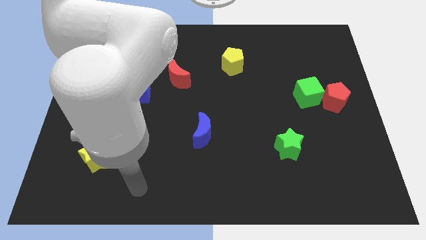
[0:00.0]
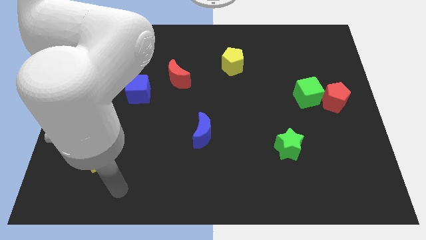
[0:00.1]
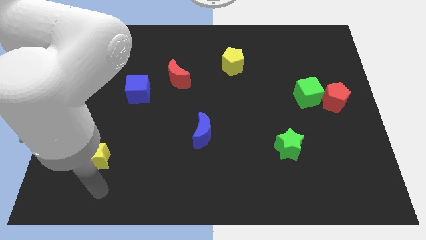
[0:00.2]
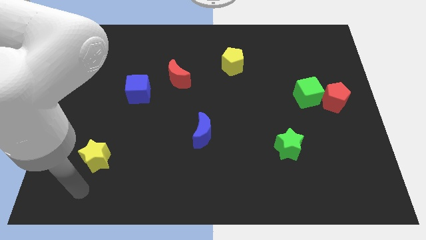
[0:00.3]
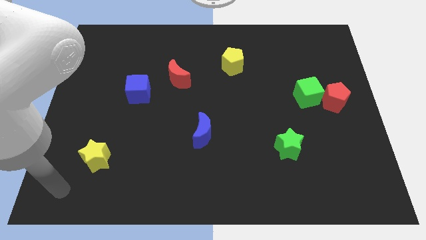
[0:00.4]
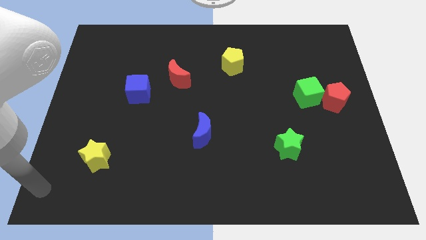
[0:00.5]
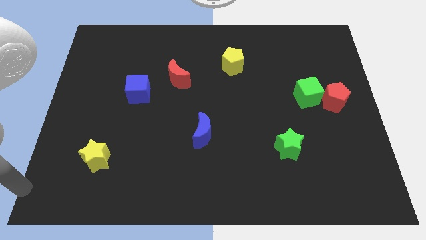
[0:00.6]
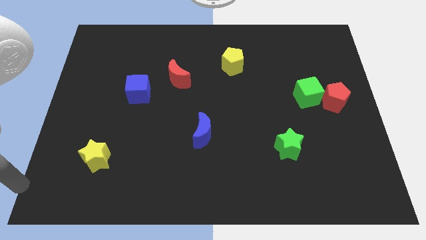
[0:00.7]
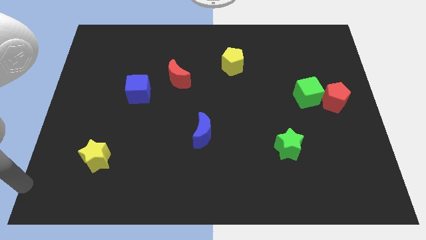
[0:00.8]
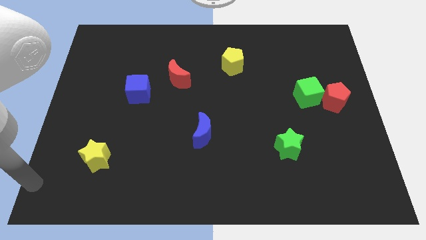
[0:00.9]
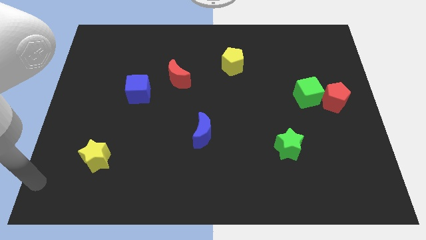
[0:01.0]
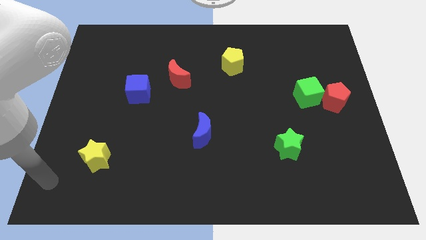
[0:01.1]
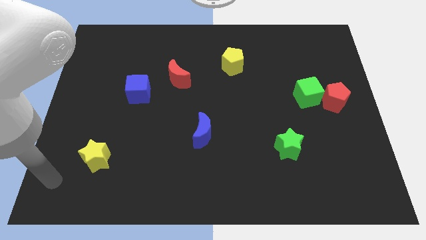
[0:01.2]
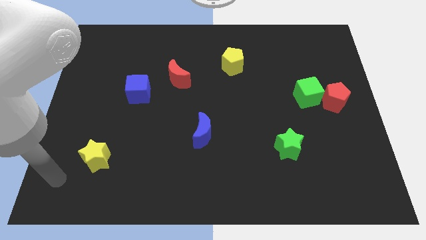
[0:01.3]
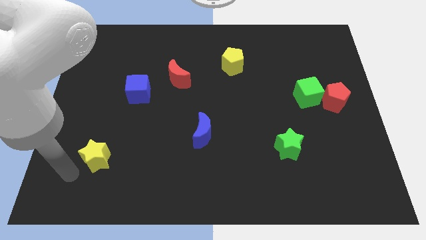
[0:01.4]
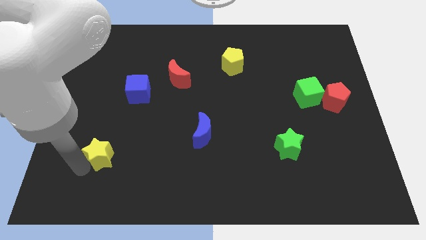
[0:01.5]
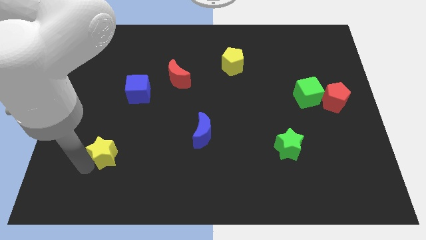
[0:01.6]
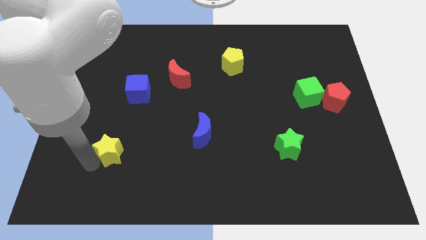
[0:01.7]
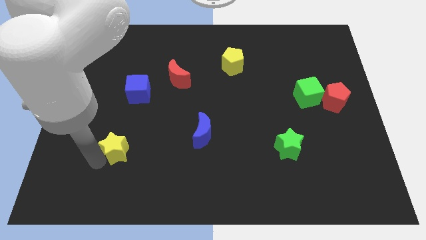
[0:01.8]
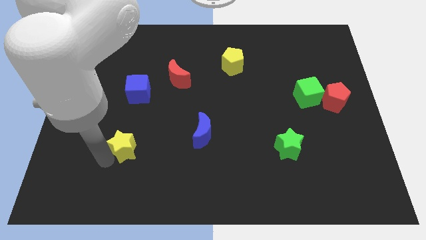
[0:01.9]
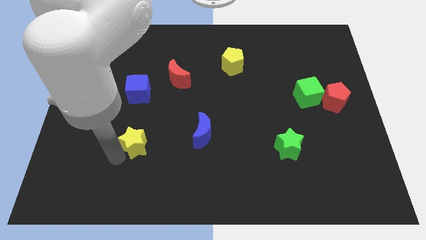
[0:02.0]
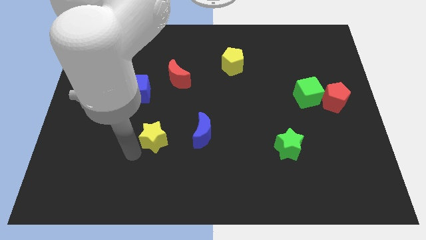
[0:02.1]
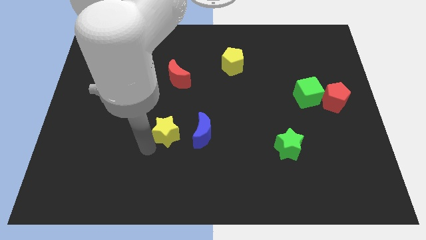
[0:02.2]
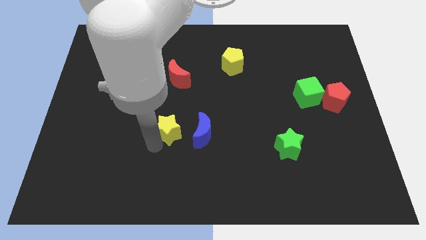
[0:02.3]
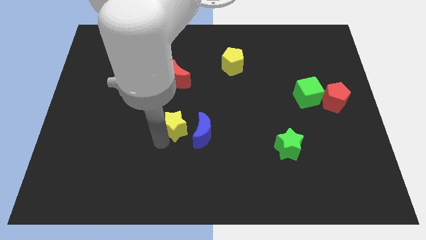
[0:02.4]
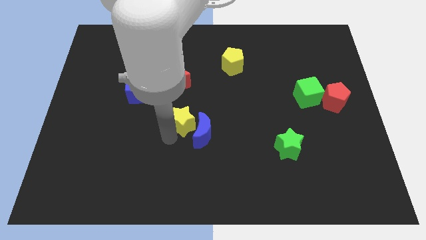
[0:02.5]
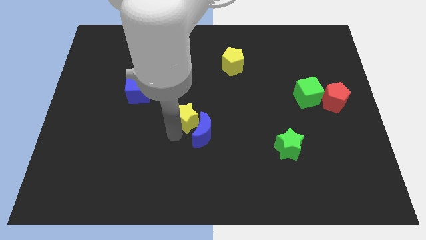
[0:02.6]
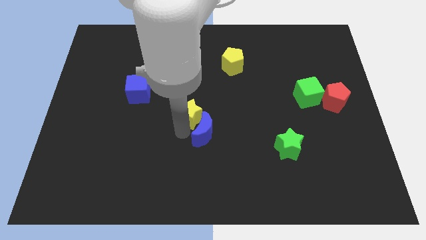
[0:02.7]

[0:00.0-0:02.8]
push the yellow star into the blue moon

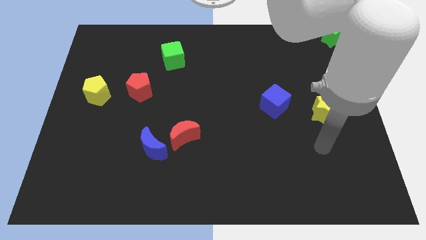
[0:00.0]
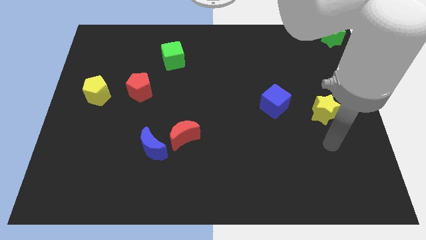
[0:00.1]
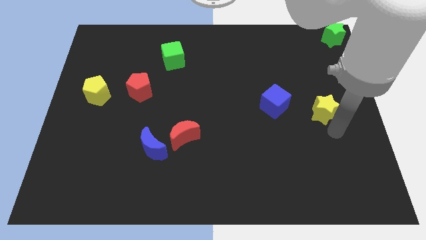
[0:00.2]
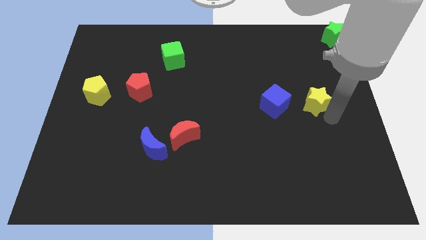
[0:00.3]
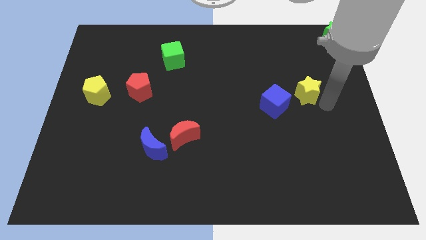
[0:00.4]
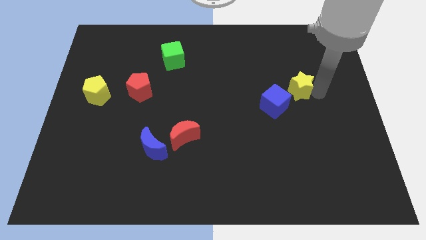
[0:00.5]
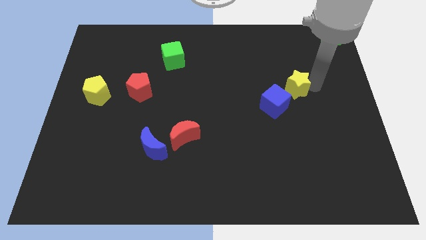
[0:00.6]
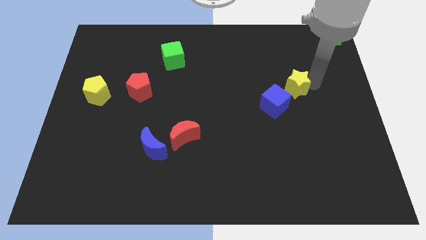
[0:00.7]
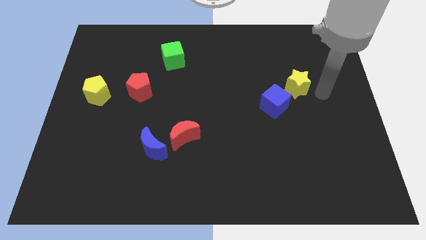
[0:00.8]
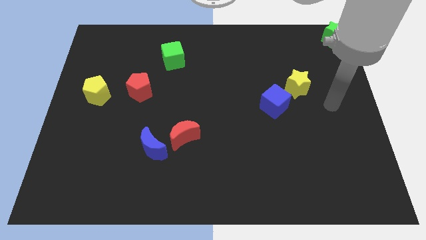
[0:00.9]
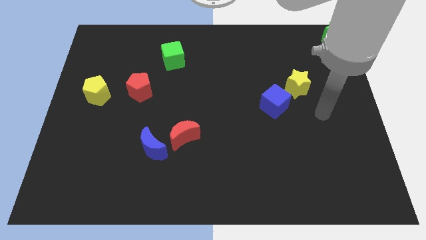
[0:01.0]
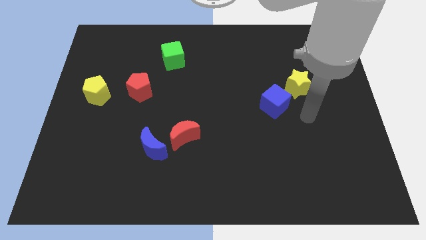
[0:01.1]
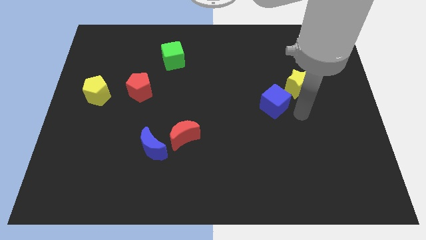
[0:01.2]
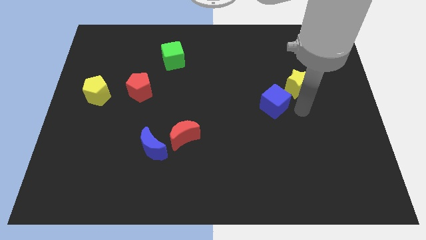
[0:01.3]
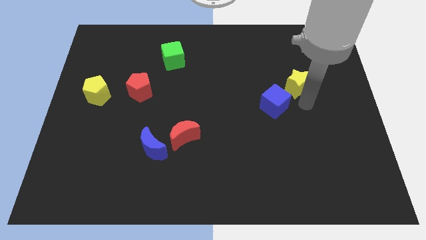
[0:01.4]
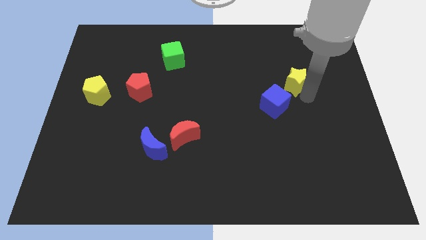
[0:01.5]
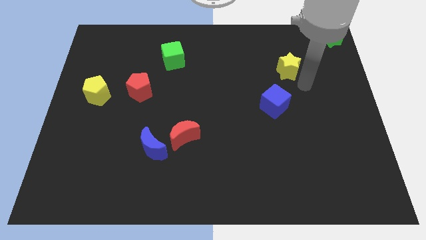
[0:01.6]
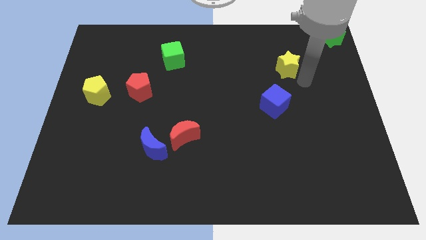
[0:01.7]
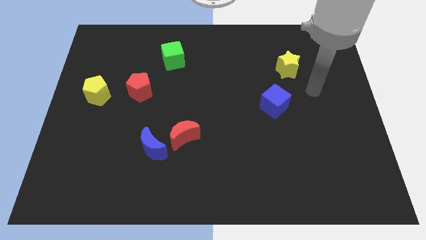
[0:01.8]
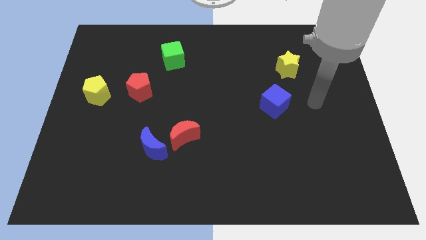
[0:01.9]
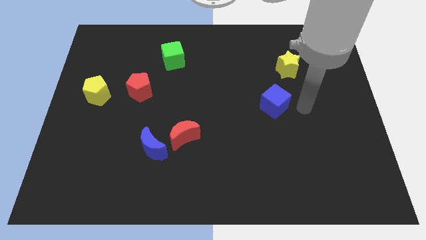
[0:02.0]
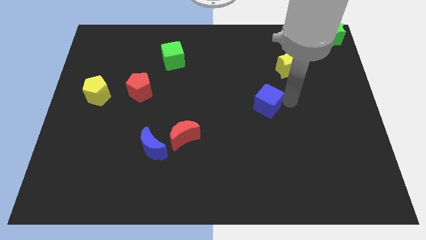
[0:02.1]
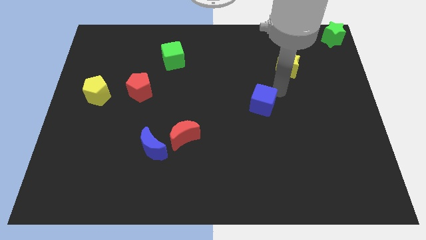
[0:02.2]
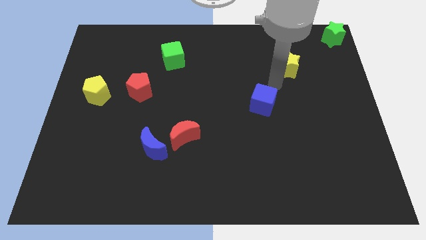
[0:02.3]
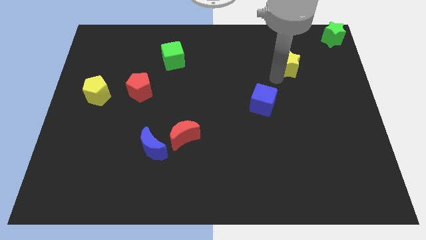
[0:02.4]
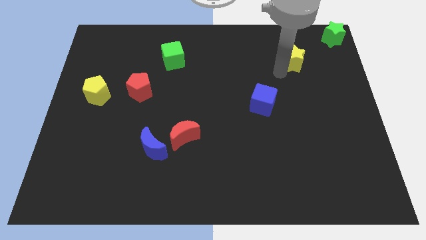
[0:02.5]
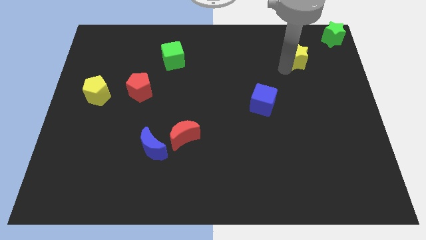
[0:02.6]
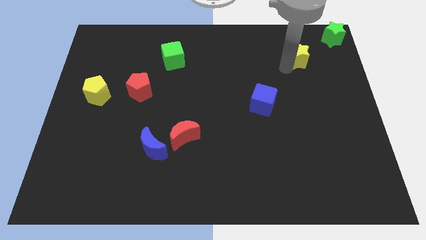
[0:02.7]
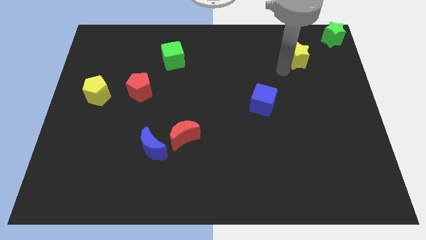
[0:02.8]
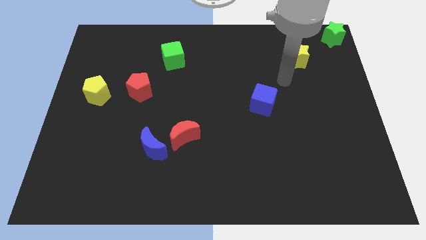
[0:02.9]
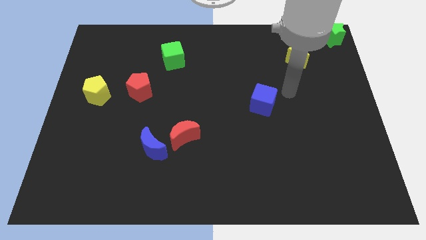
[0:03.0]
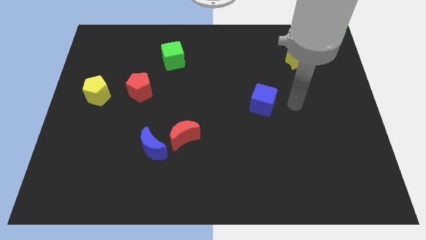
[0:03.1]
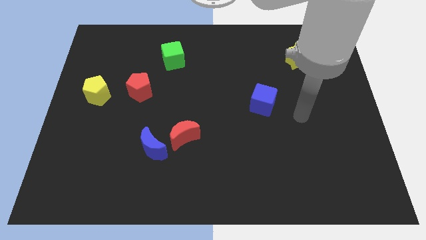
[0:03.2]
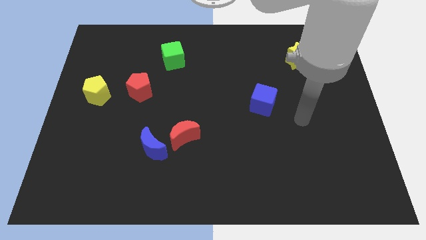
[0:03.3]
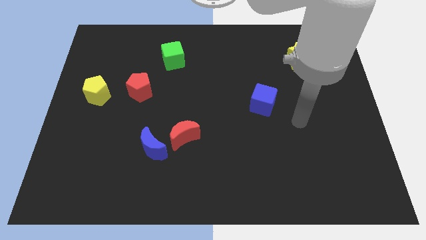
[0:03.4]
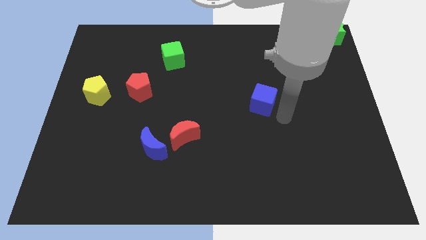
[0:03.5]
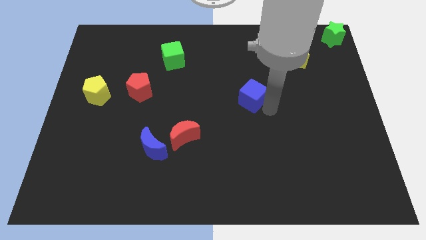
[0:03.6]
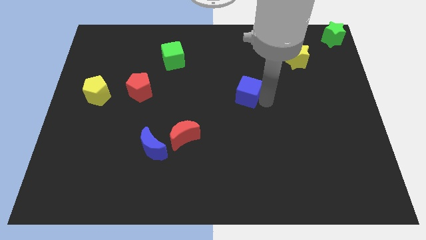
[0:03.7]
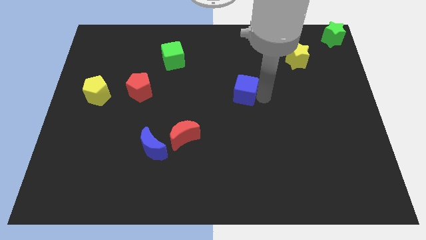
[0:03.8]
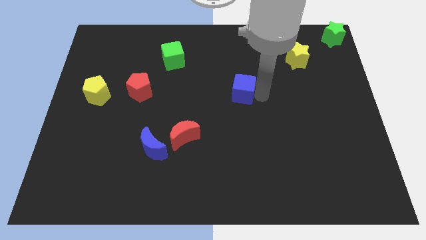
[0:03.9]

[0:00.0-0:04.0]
push yellow star and the blue cube diagonal to each other

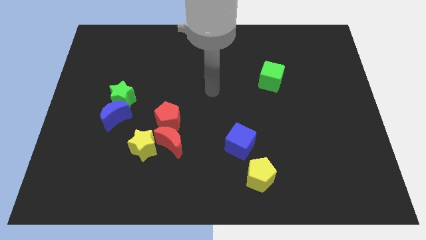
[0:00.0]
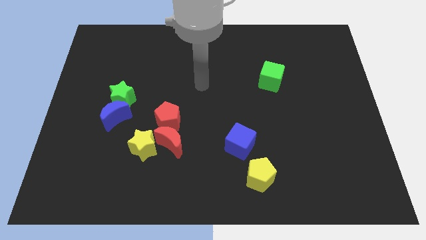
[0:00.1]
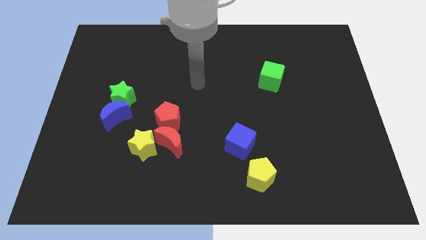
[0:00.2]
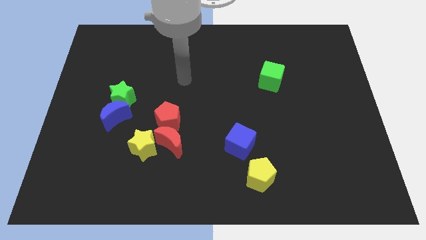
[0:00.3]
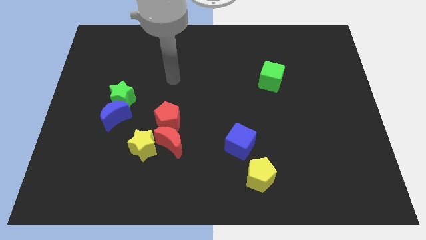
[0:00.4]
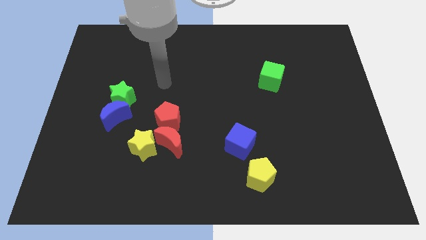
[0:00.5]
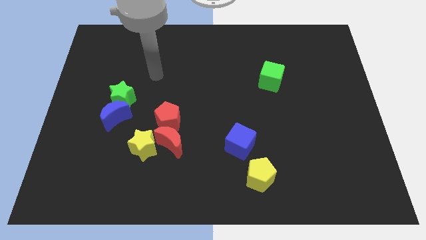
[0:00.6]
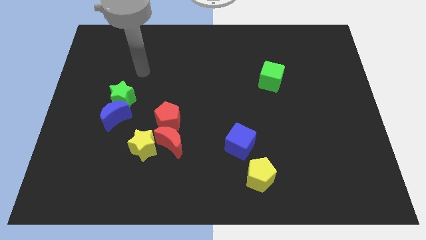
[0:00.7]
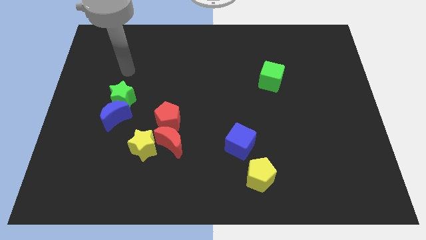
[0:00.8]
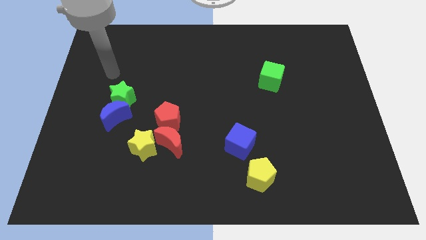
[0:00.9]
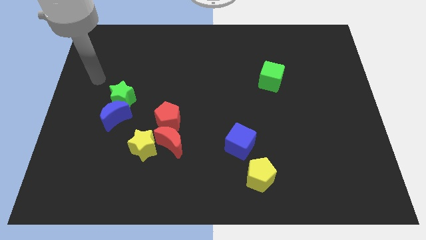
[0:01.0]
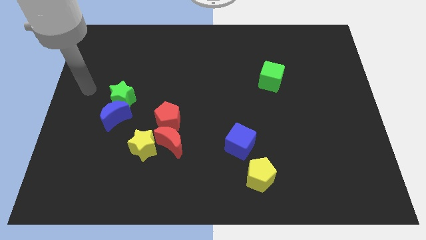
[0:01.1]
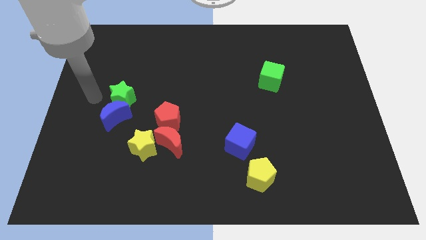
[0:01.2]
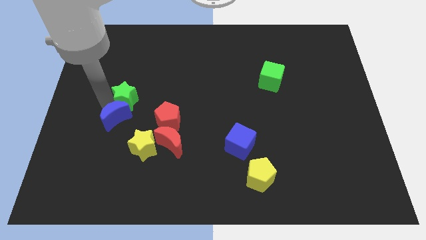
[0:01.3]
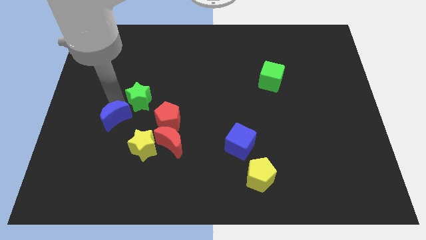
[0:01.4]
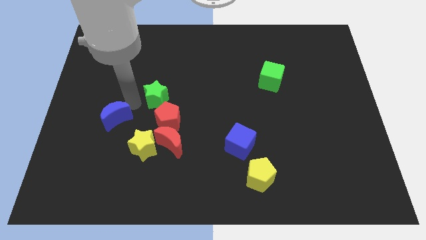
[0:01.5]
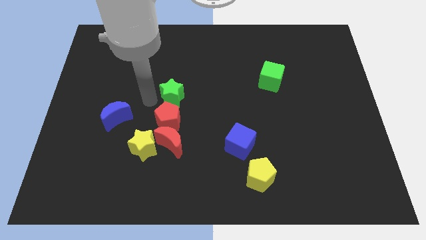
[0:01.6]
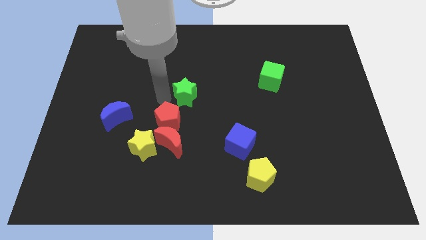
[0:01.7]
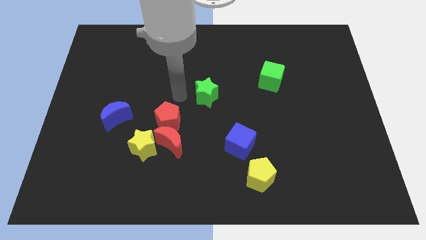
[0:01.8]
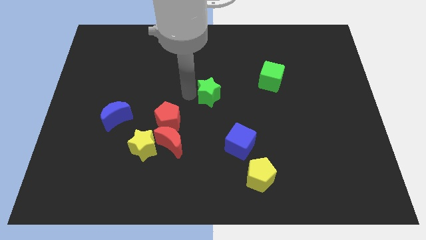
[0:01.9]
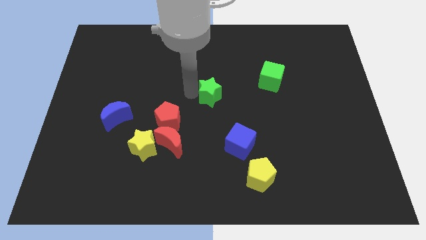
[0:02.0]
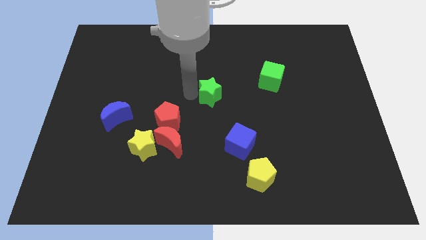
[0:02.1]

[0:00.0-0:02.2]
push the green star towards the center of the board
